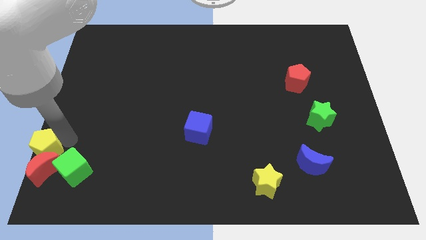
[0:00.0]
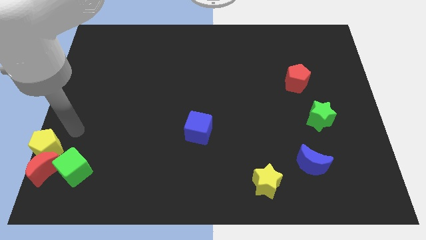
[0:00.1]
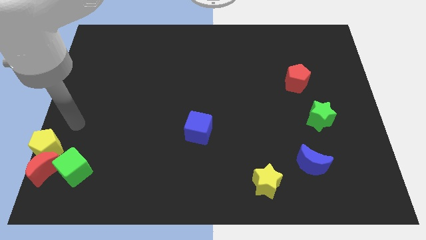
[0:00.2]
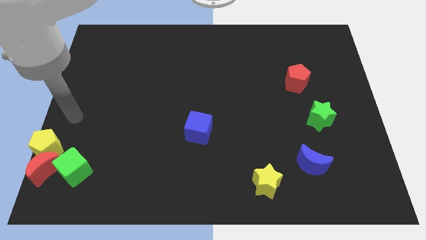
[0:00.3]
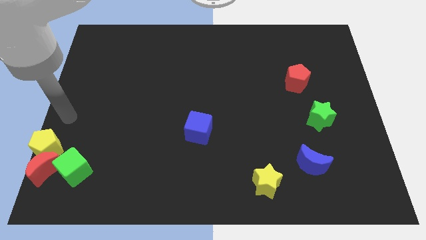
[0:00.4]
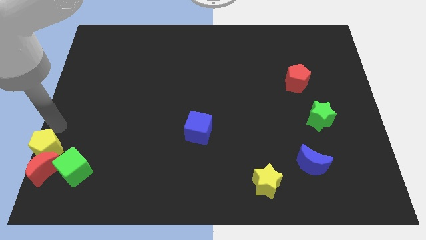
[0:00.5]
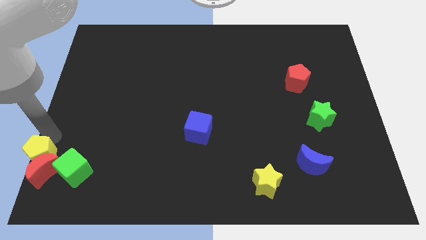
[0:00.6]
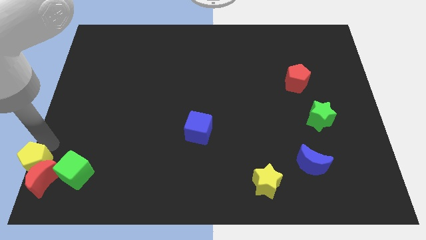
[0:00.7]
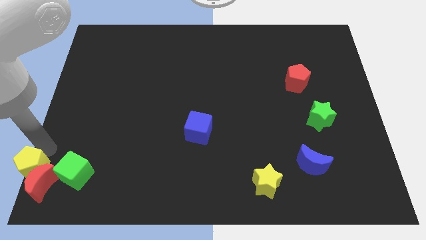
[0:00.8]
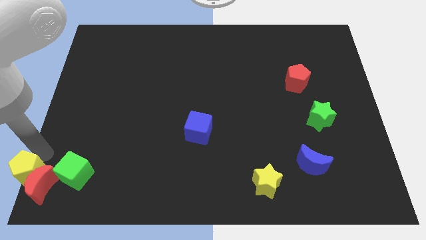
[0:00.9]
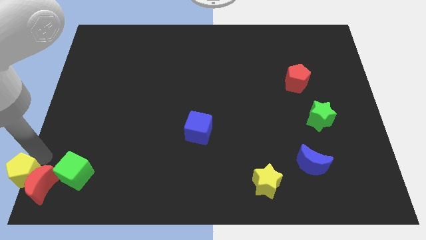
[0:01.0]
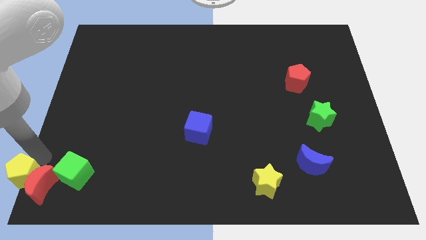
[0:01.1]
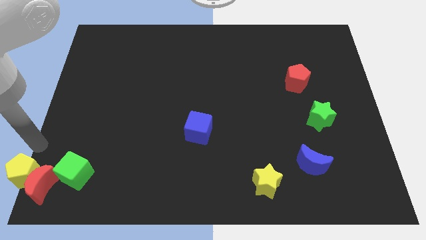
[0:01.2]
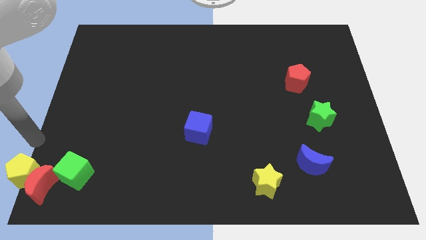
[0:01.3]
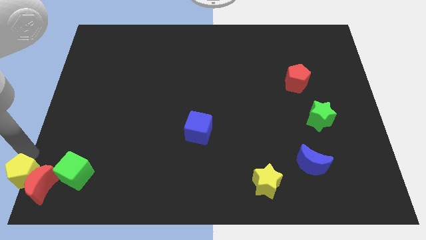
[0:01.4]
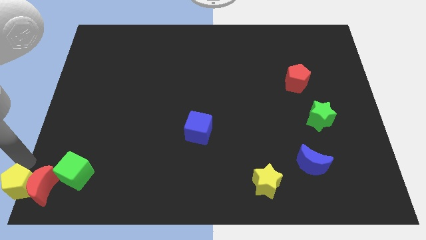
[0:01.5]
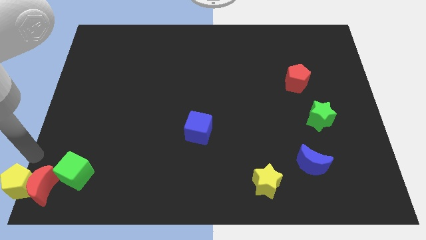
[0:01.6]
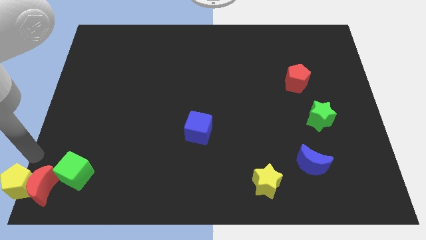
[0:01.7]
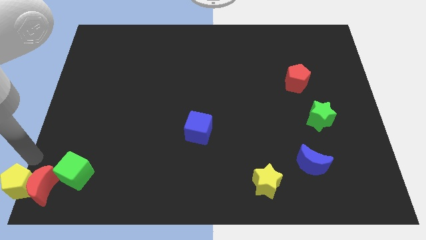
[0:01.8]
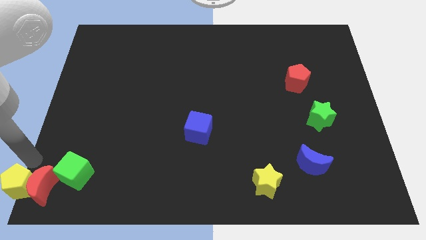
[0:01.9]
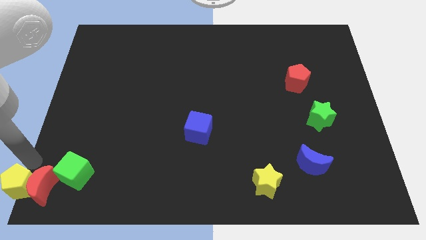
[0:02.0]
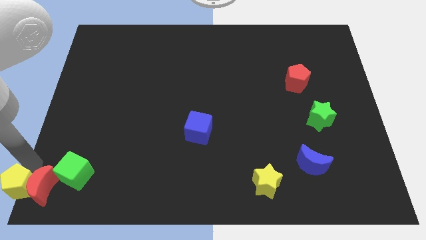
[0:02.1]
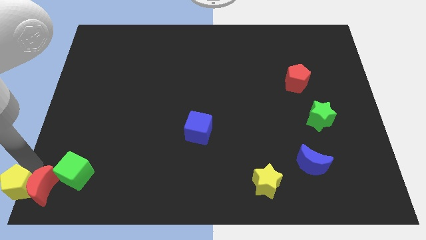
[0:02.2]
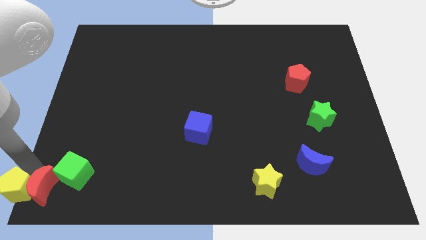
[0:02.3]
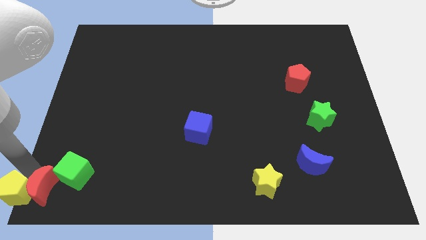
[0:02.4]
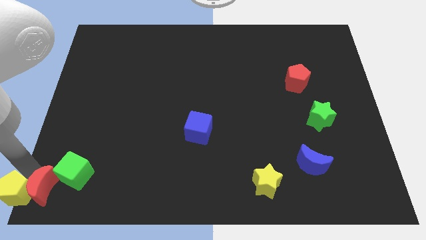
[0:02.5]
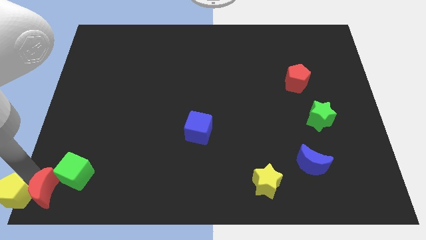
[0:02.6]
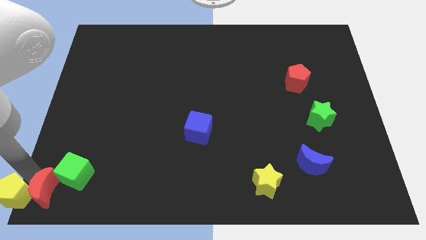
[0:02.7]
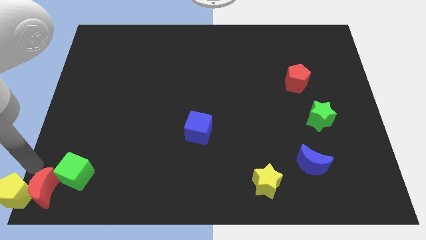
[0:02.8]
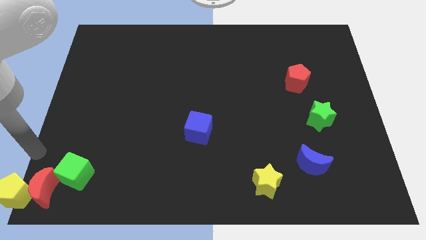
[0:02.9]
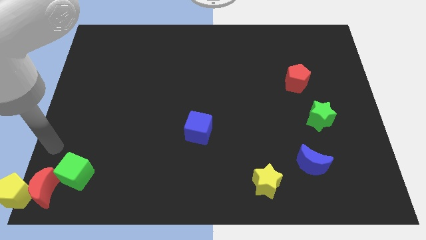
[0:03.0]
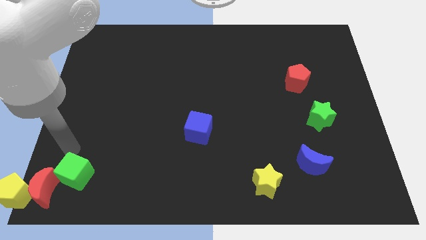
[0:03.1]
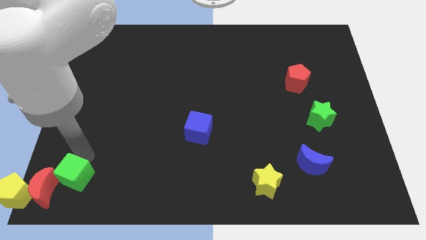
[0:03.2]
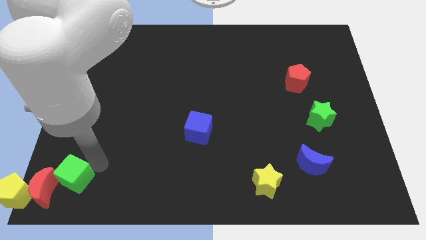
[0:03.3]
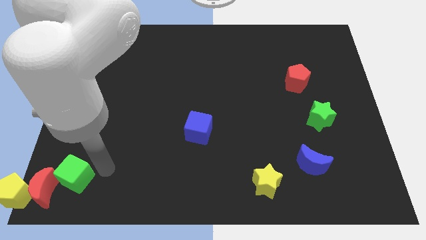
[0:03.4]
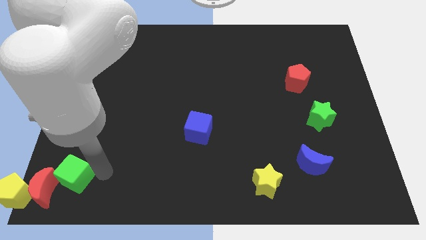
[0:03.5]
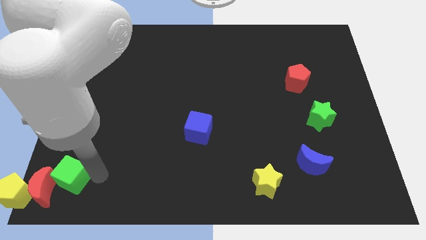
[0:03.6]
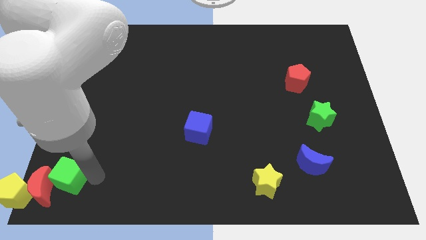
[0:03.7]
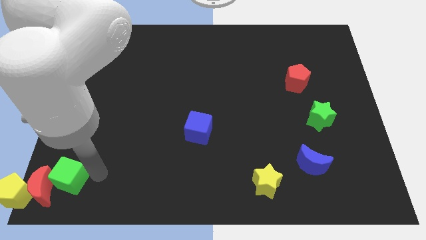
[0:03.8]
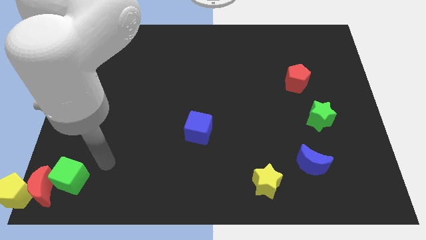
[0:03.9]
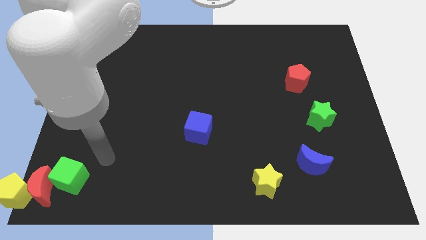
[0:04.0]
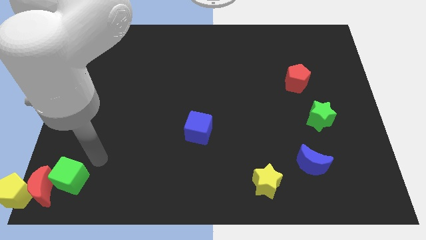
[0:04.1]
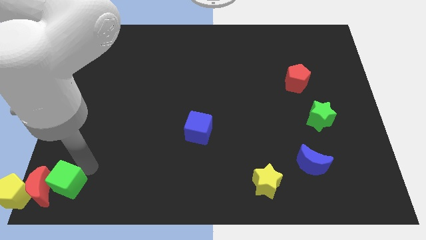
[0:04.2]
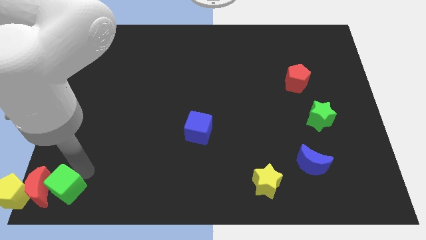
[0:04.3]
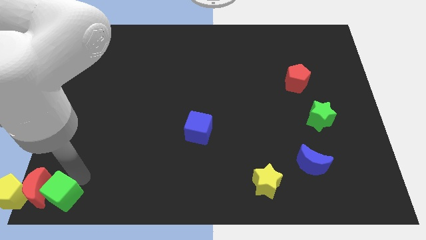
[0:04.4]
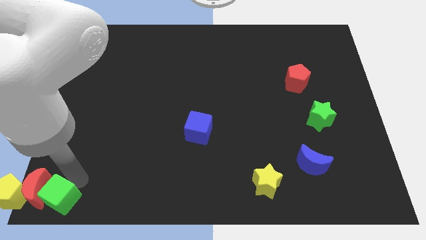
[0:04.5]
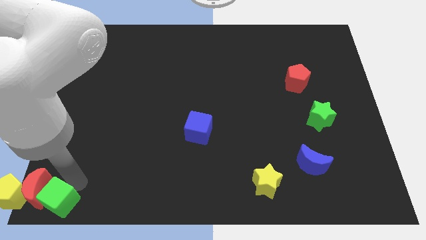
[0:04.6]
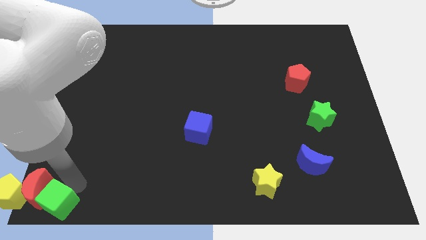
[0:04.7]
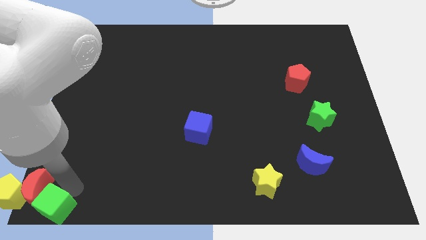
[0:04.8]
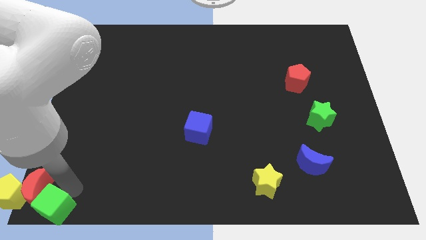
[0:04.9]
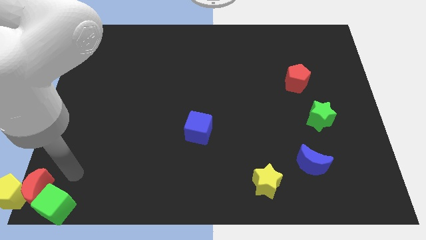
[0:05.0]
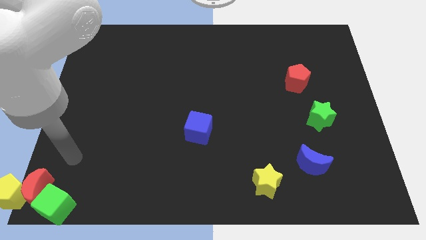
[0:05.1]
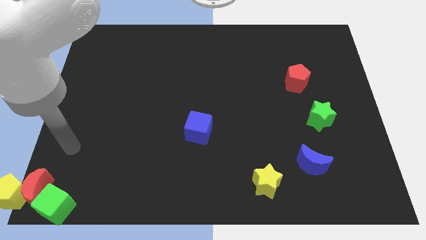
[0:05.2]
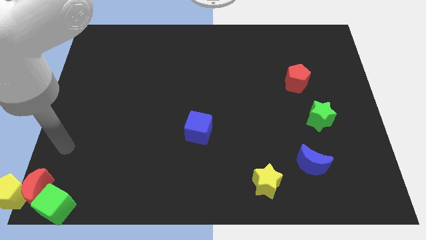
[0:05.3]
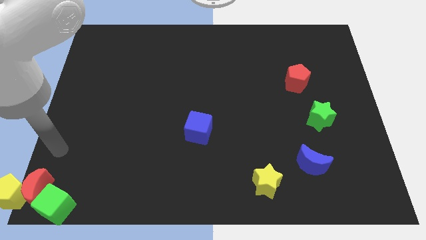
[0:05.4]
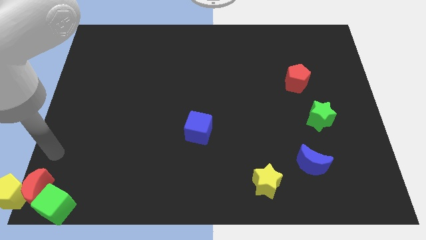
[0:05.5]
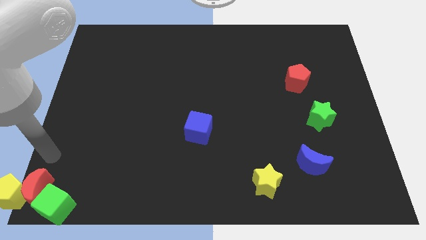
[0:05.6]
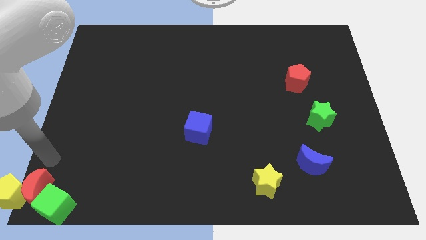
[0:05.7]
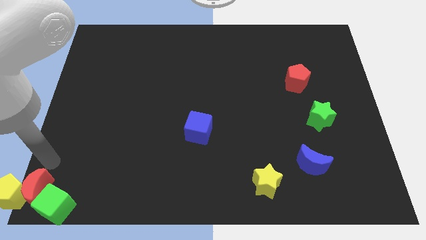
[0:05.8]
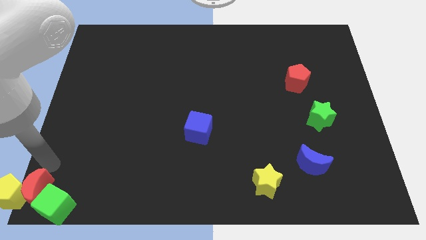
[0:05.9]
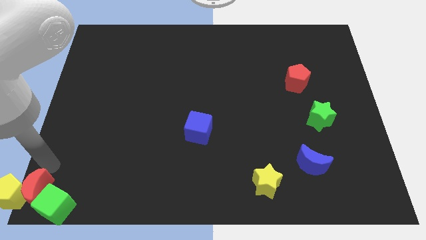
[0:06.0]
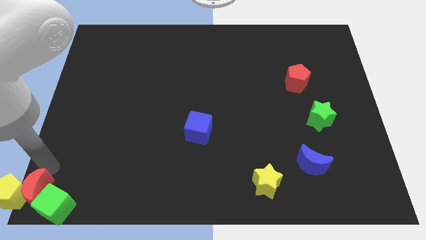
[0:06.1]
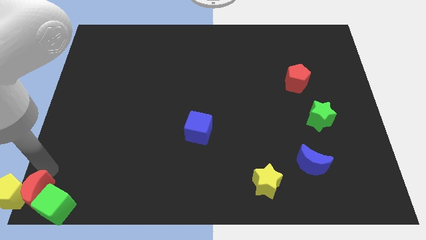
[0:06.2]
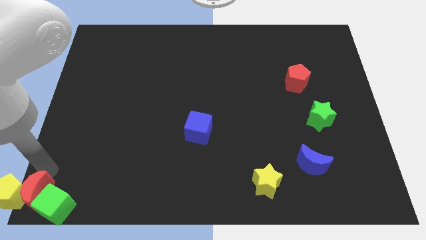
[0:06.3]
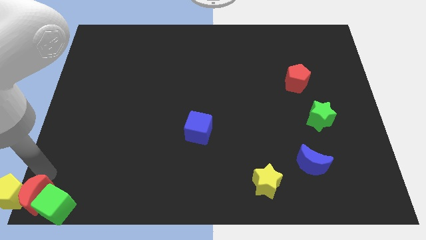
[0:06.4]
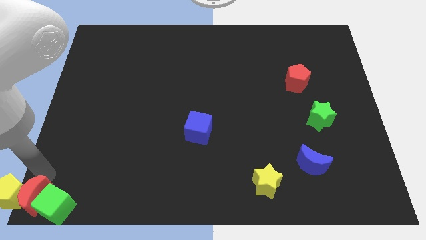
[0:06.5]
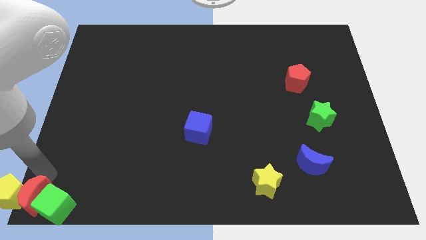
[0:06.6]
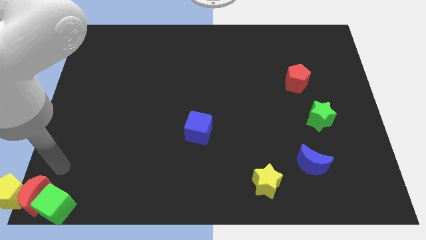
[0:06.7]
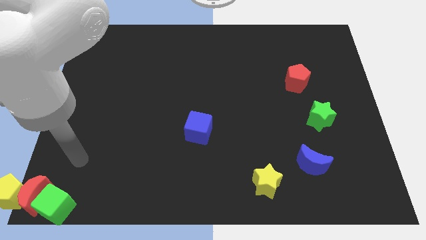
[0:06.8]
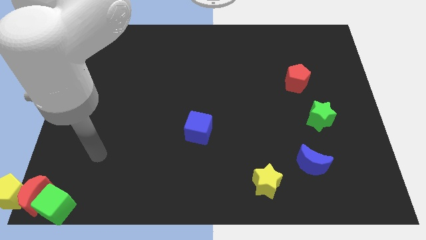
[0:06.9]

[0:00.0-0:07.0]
place the yellow pentagon red crescent and the green cube at the bottom left corner of the board

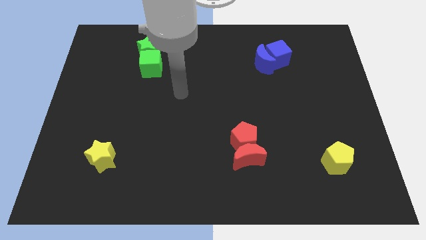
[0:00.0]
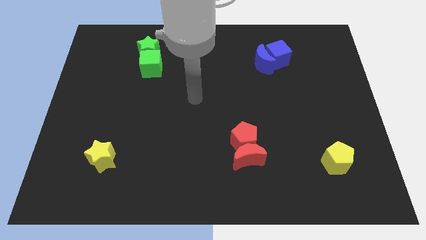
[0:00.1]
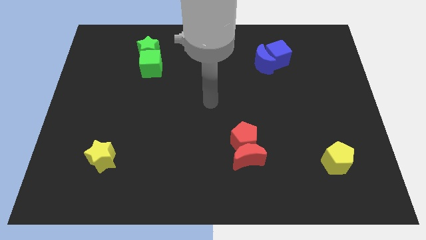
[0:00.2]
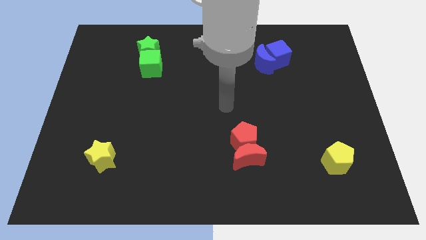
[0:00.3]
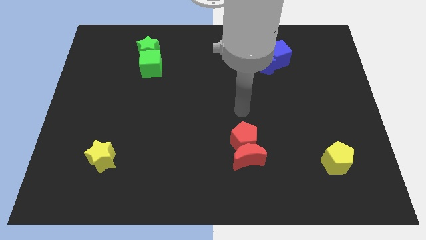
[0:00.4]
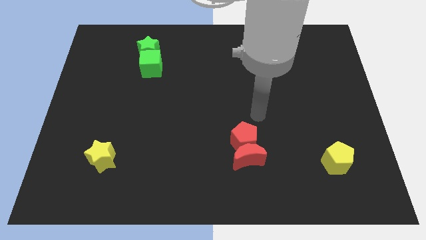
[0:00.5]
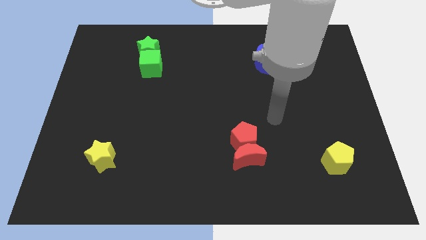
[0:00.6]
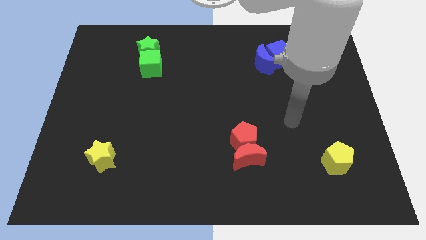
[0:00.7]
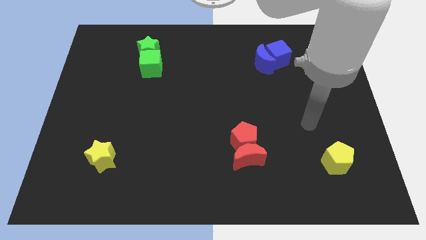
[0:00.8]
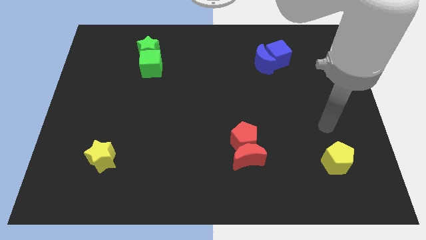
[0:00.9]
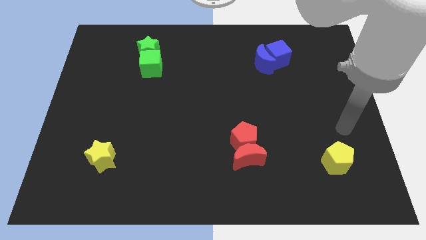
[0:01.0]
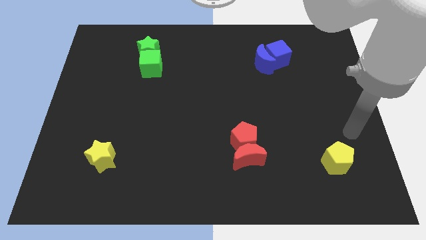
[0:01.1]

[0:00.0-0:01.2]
place the arm close to the yellow pentagon

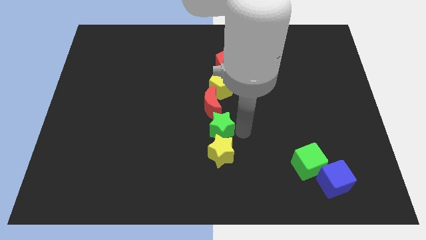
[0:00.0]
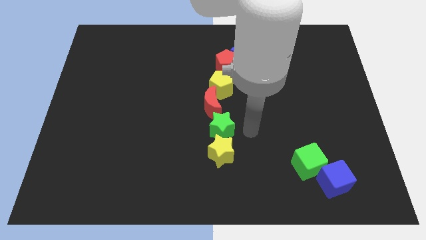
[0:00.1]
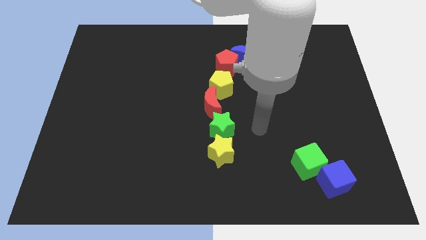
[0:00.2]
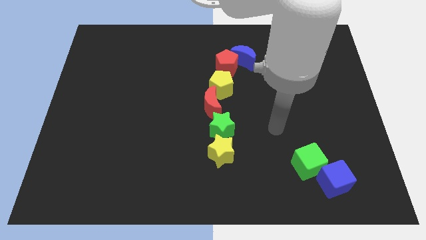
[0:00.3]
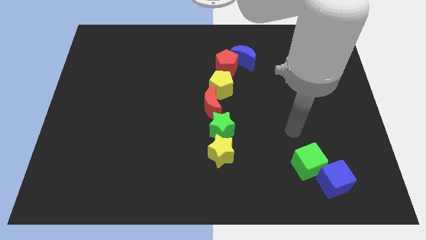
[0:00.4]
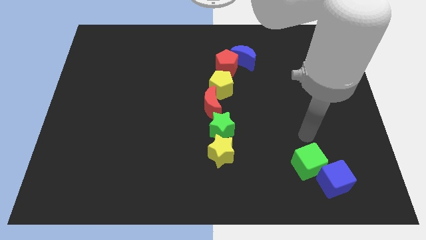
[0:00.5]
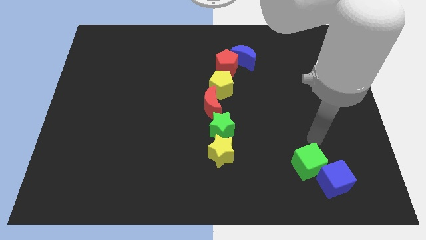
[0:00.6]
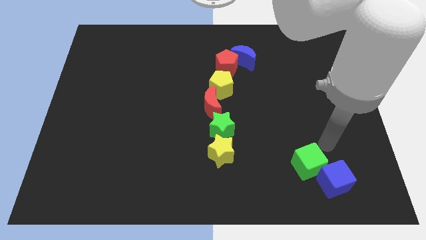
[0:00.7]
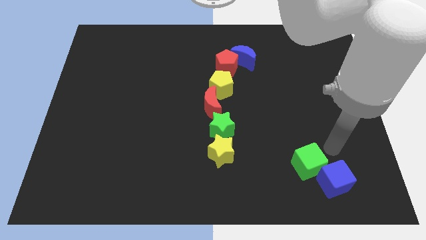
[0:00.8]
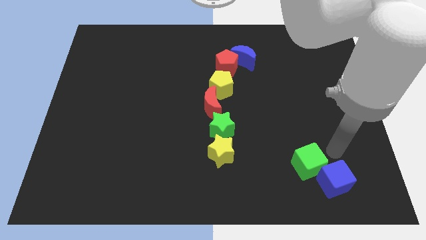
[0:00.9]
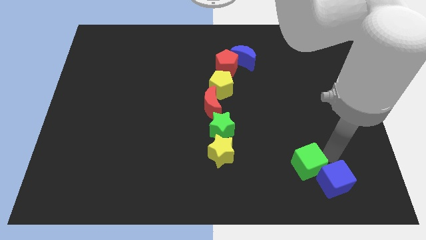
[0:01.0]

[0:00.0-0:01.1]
place your arm right to green cube
